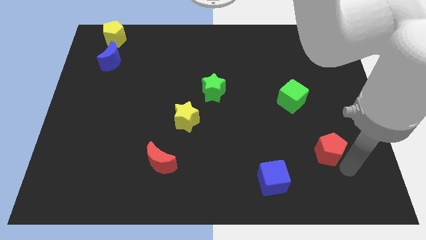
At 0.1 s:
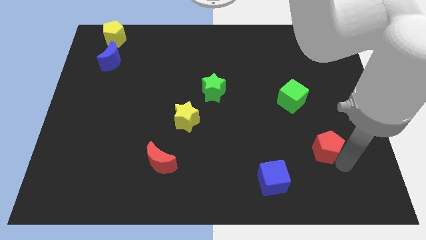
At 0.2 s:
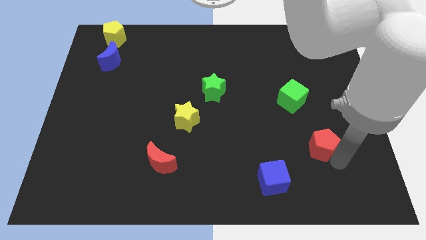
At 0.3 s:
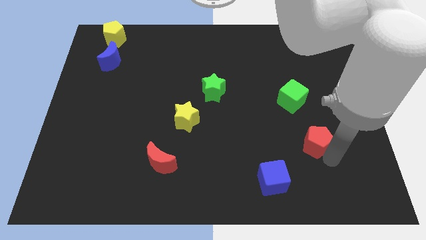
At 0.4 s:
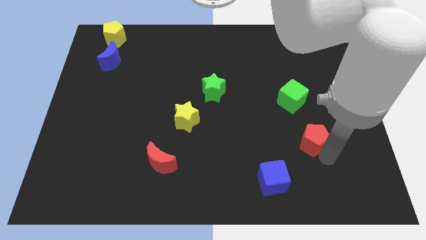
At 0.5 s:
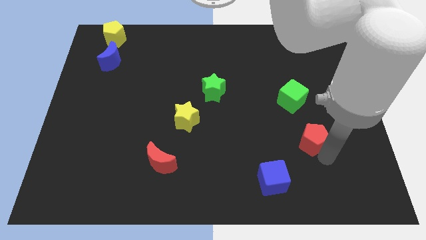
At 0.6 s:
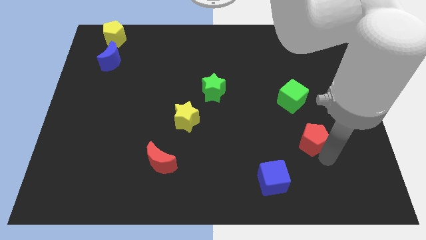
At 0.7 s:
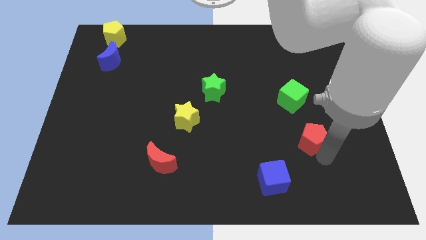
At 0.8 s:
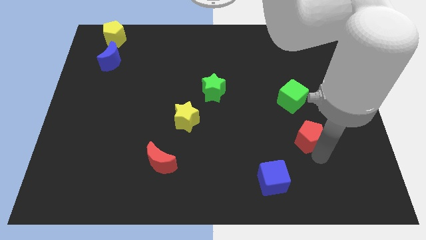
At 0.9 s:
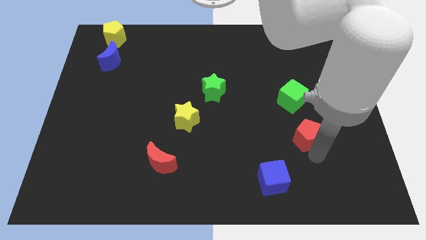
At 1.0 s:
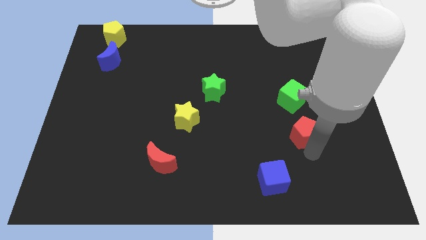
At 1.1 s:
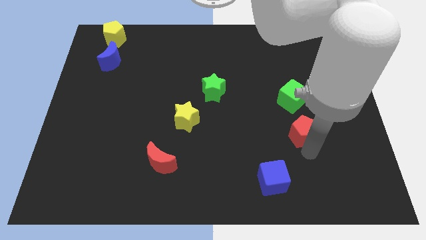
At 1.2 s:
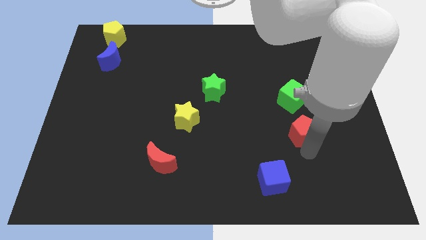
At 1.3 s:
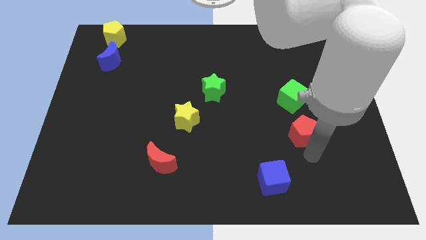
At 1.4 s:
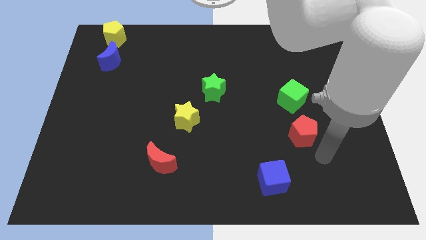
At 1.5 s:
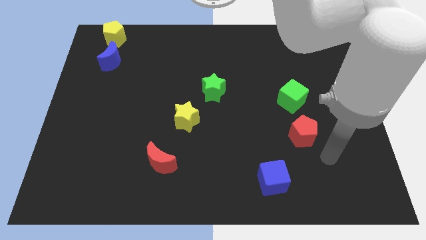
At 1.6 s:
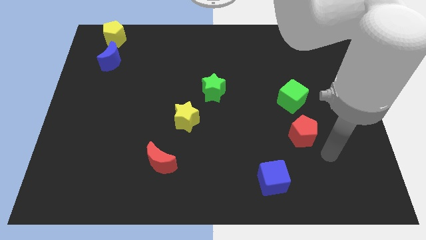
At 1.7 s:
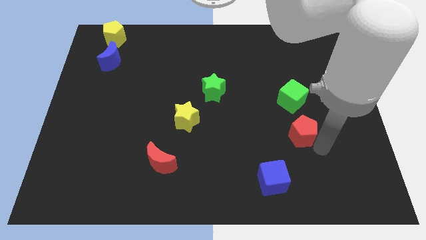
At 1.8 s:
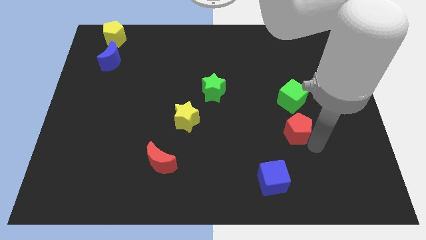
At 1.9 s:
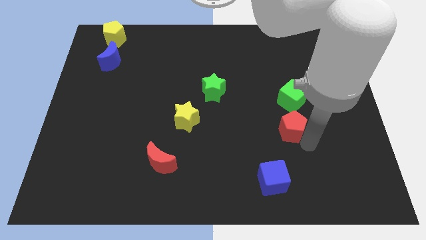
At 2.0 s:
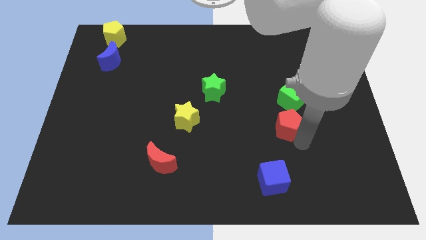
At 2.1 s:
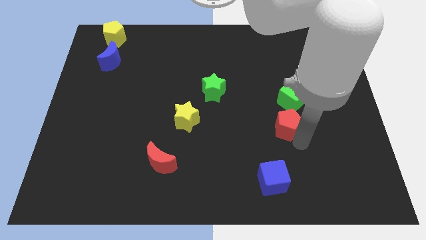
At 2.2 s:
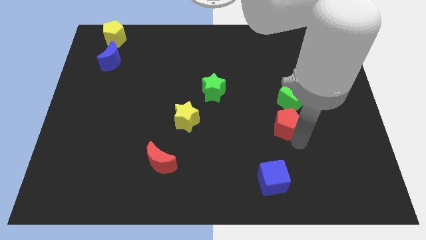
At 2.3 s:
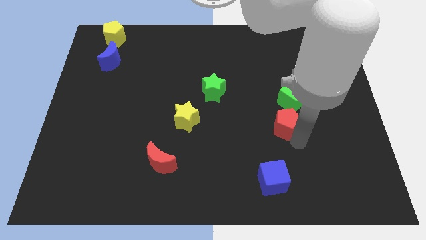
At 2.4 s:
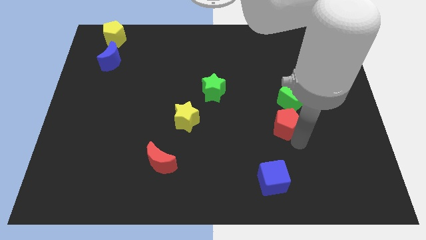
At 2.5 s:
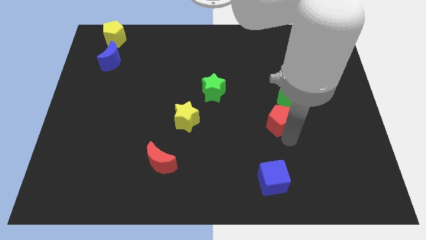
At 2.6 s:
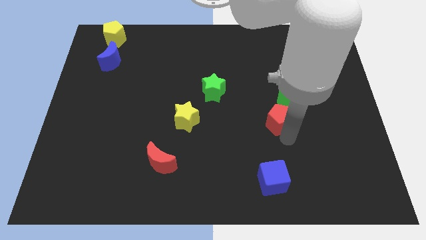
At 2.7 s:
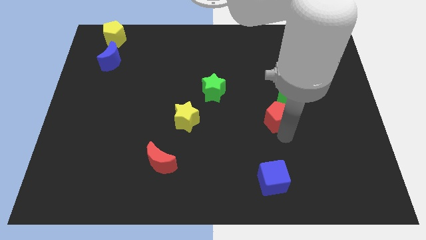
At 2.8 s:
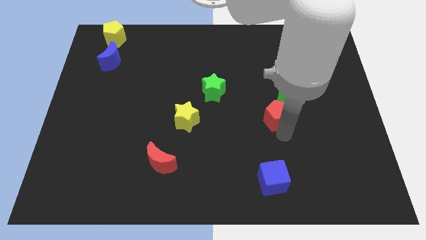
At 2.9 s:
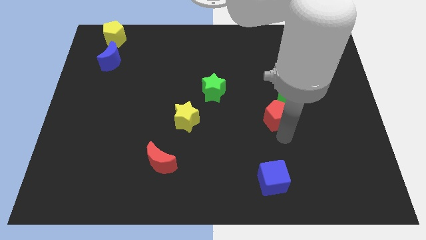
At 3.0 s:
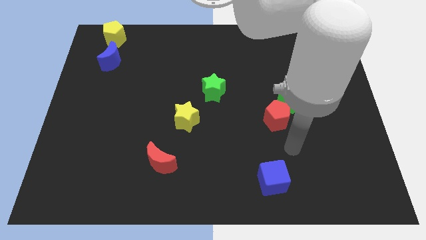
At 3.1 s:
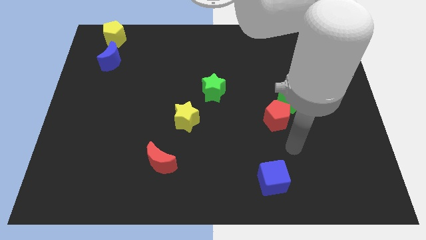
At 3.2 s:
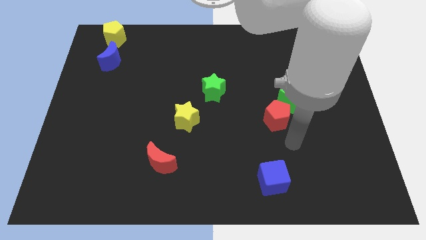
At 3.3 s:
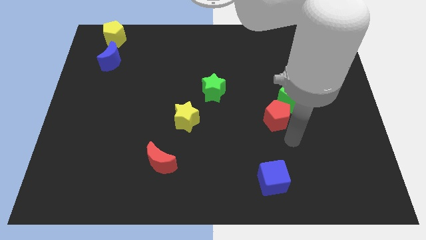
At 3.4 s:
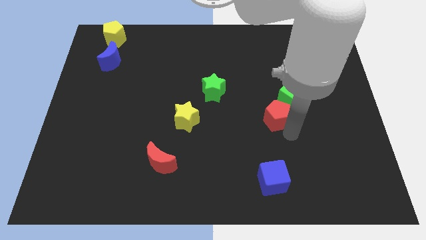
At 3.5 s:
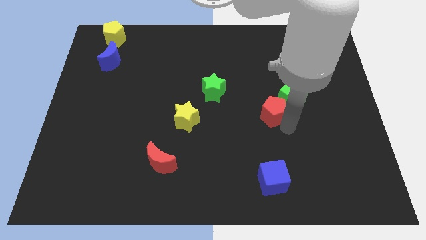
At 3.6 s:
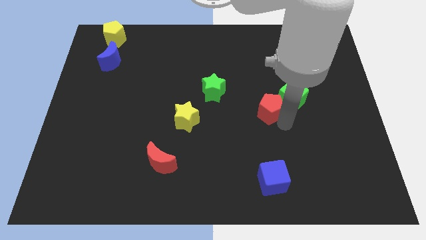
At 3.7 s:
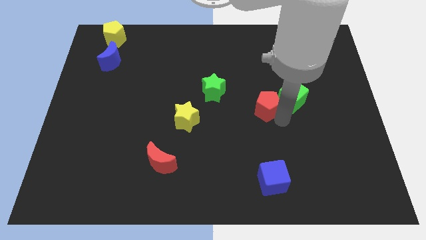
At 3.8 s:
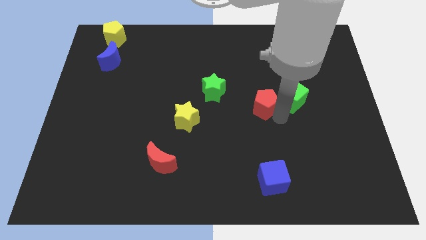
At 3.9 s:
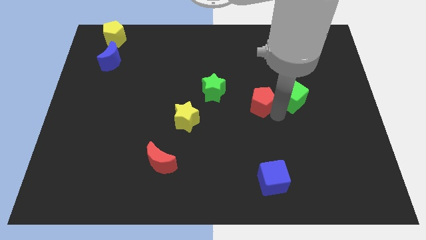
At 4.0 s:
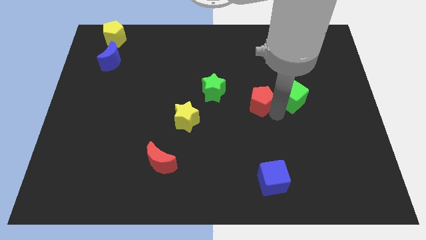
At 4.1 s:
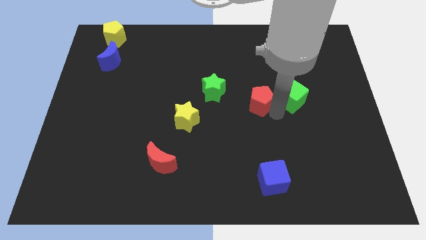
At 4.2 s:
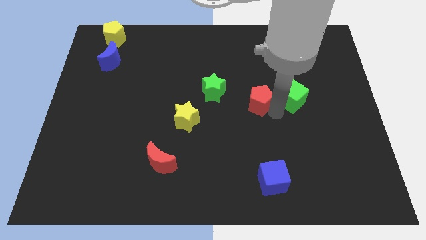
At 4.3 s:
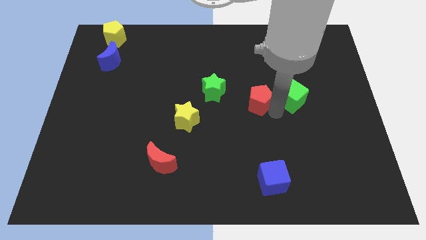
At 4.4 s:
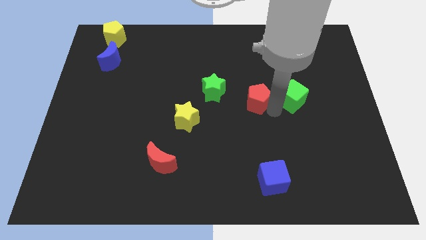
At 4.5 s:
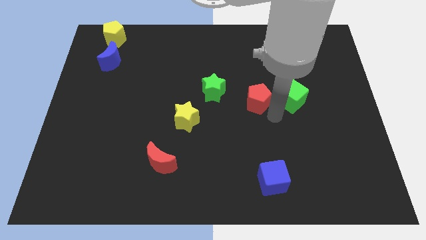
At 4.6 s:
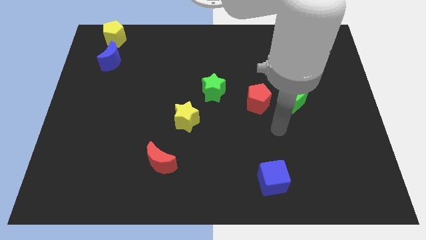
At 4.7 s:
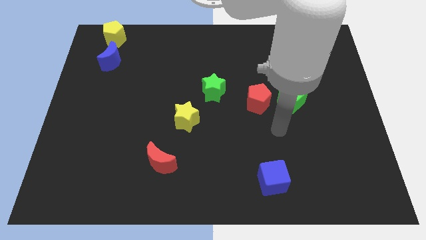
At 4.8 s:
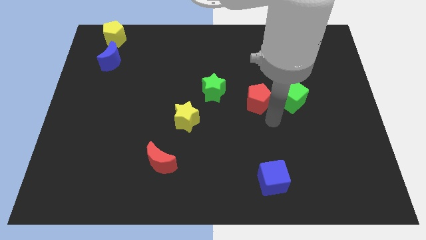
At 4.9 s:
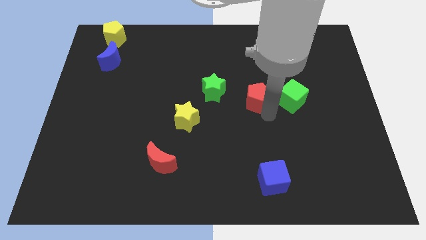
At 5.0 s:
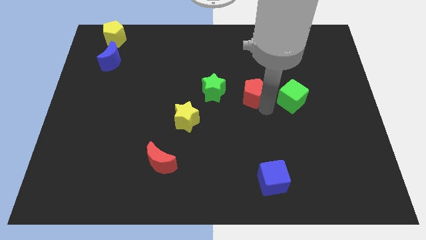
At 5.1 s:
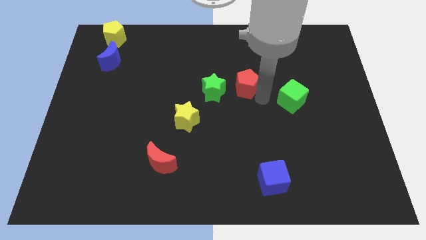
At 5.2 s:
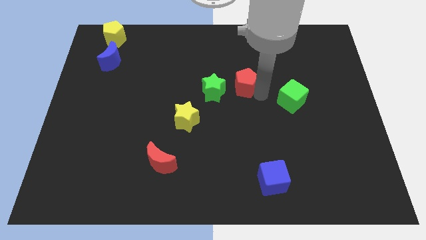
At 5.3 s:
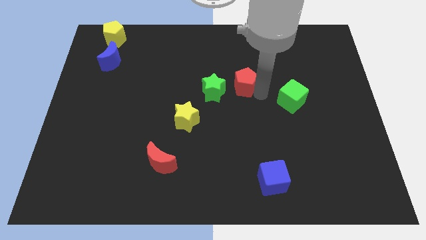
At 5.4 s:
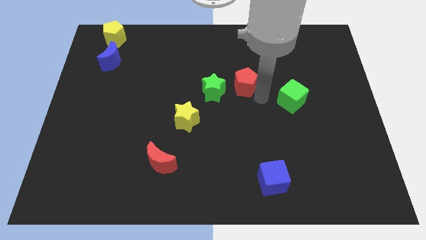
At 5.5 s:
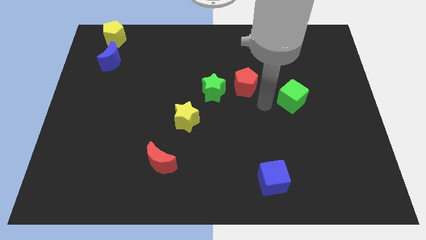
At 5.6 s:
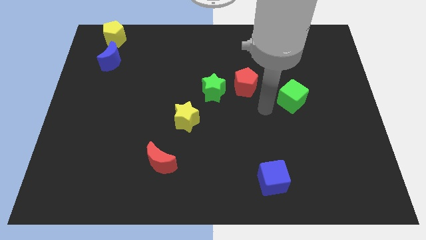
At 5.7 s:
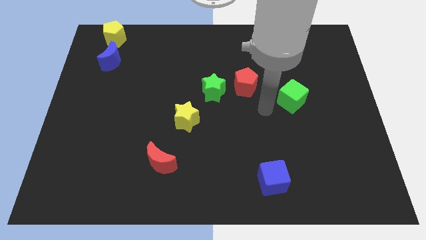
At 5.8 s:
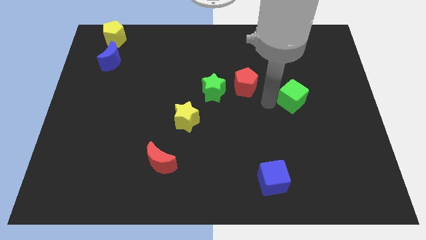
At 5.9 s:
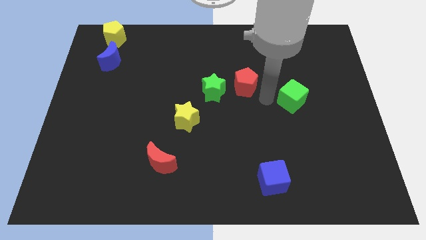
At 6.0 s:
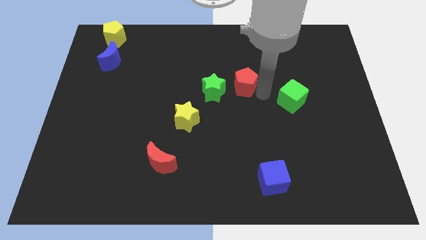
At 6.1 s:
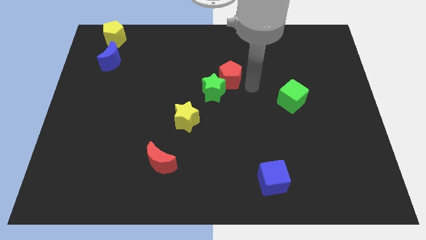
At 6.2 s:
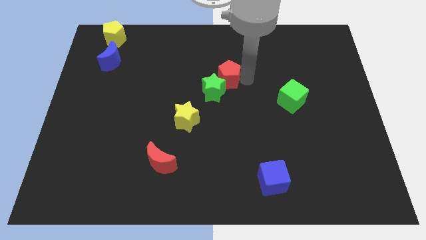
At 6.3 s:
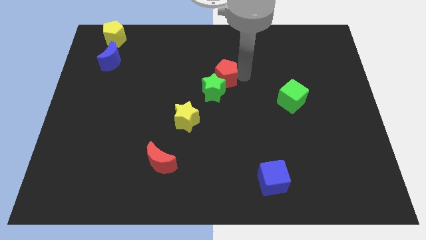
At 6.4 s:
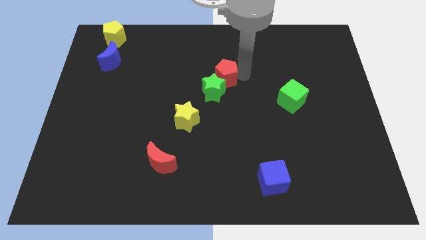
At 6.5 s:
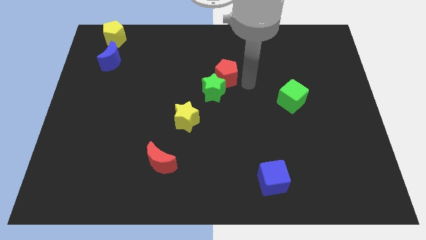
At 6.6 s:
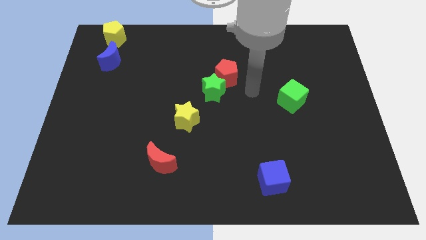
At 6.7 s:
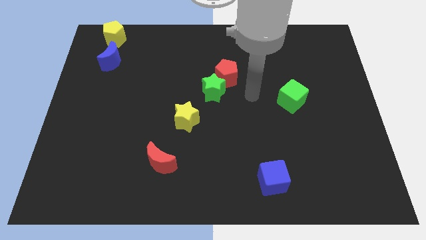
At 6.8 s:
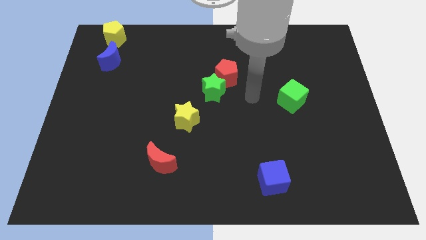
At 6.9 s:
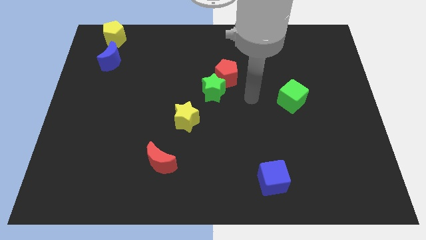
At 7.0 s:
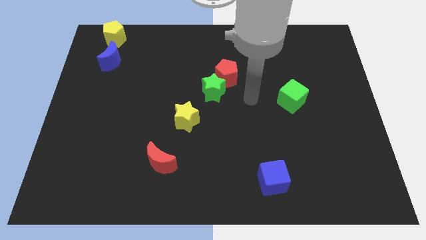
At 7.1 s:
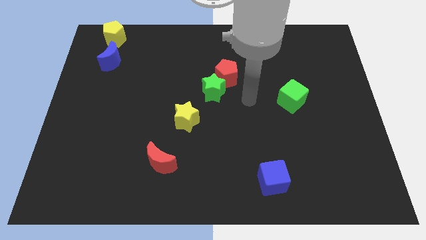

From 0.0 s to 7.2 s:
move the red pentagon above right to the green star

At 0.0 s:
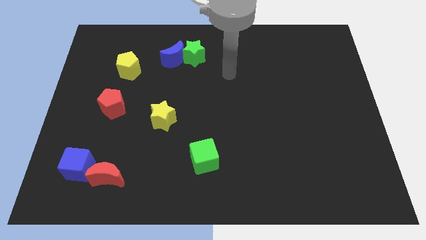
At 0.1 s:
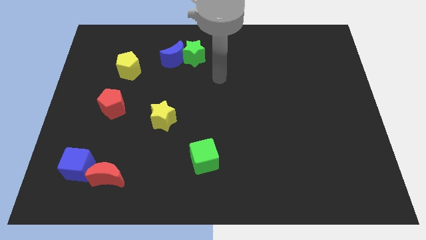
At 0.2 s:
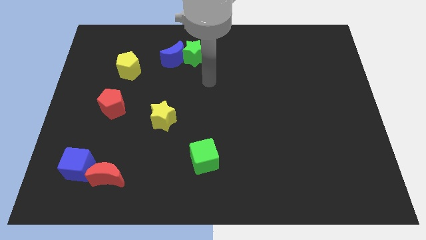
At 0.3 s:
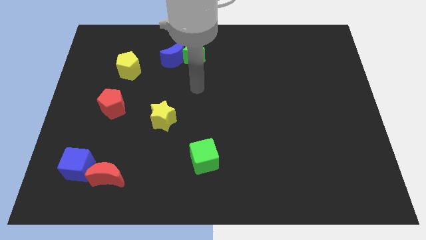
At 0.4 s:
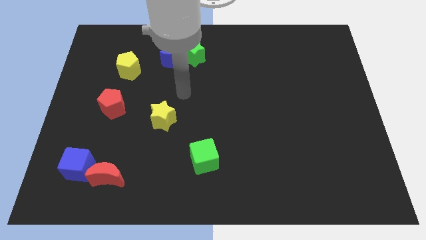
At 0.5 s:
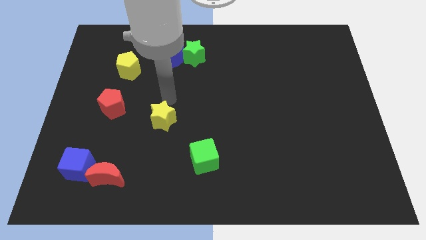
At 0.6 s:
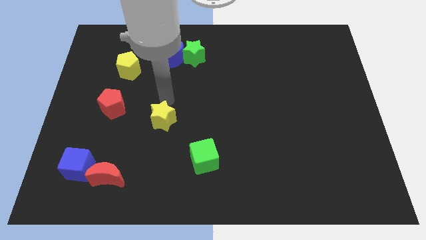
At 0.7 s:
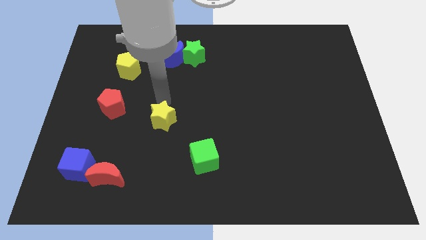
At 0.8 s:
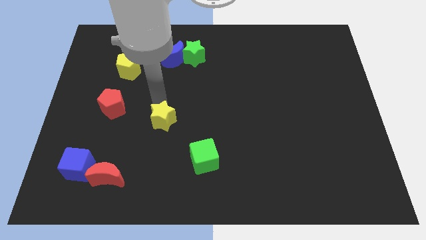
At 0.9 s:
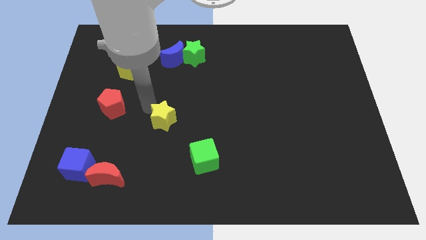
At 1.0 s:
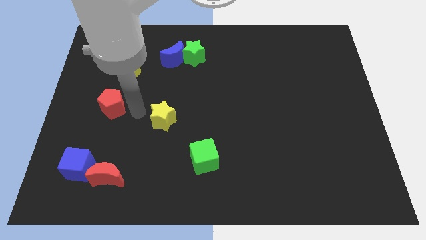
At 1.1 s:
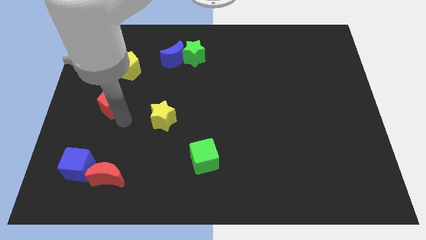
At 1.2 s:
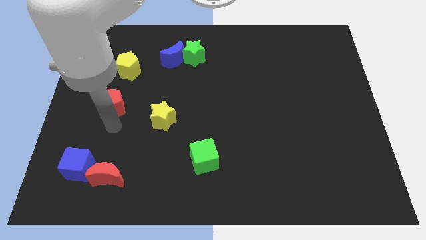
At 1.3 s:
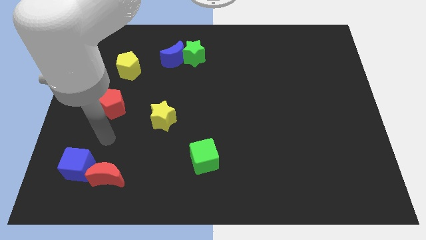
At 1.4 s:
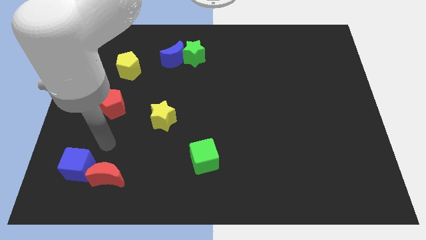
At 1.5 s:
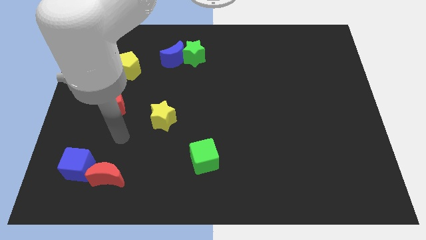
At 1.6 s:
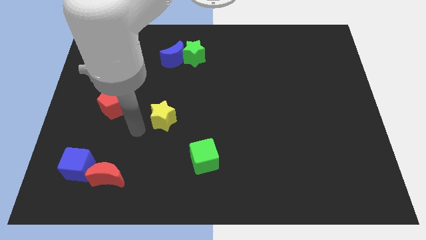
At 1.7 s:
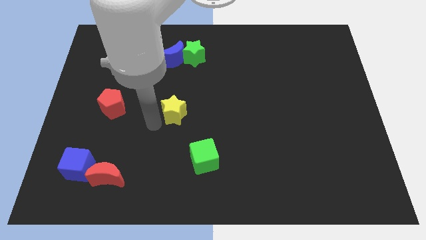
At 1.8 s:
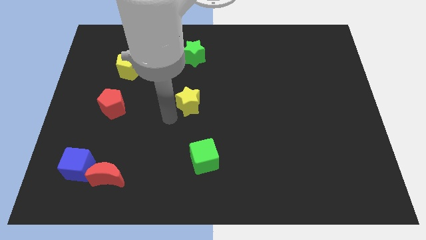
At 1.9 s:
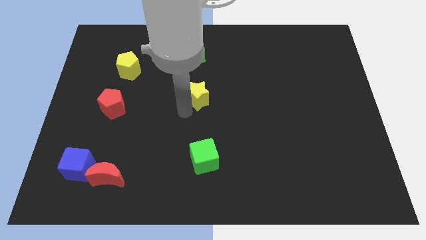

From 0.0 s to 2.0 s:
place the yellow star in between the green cube and green star
